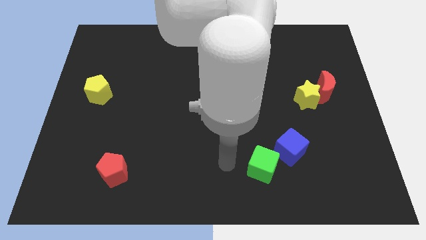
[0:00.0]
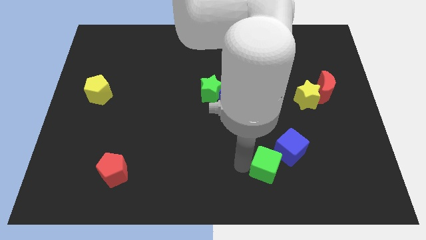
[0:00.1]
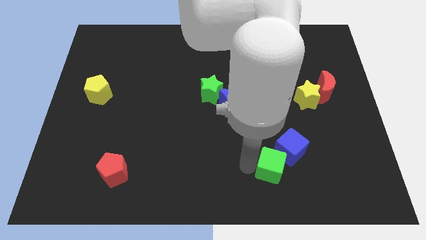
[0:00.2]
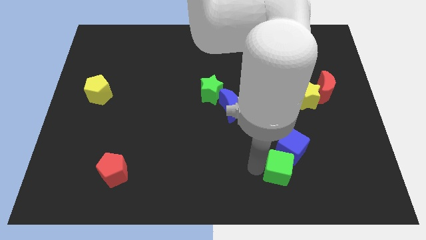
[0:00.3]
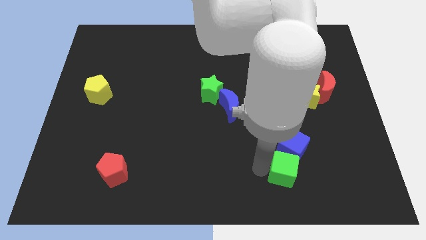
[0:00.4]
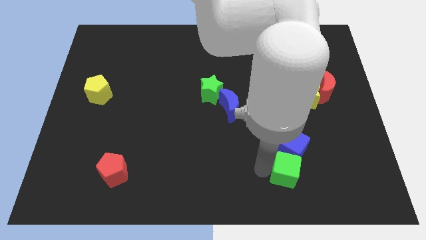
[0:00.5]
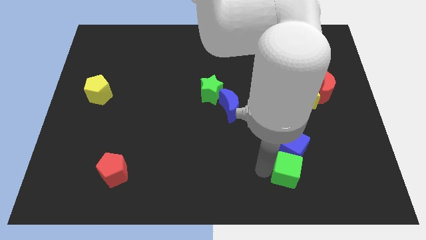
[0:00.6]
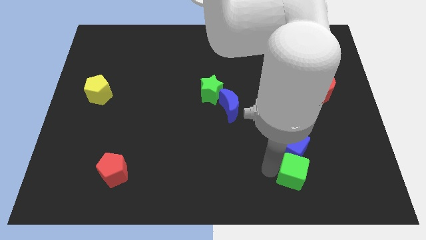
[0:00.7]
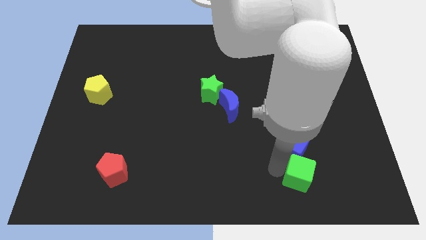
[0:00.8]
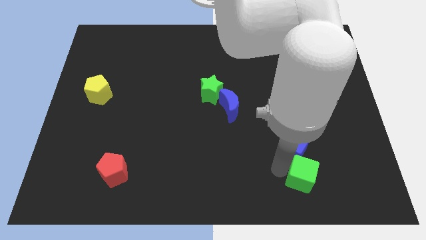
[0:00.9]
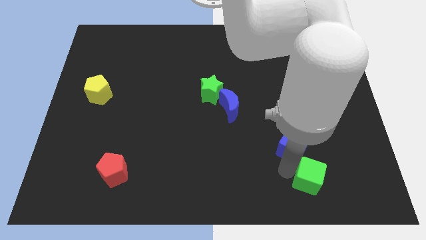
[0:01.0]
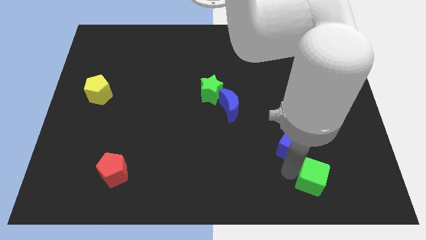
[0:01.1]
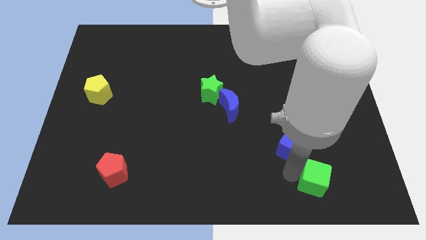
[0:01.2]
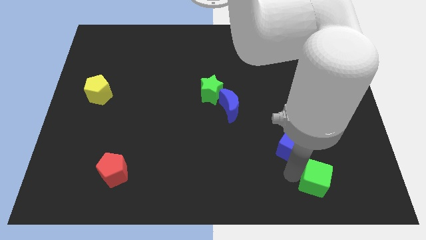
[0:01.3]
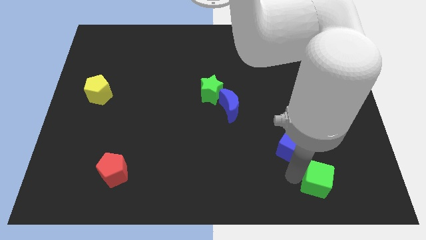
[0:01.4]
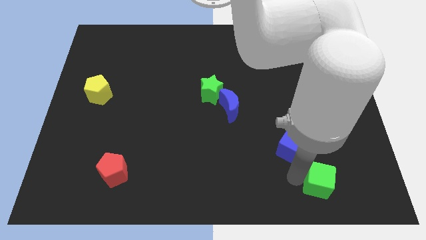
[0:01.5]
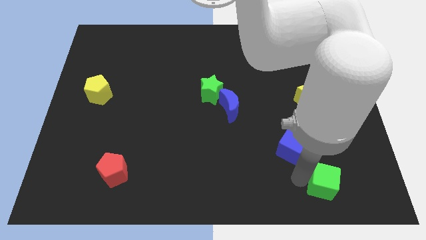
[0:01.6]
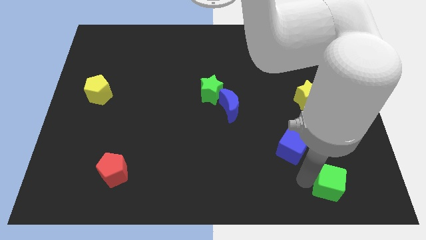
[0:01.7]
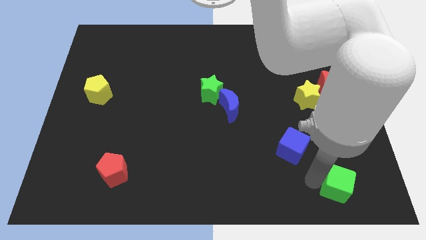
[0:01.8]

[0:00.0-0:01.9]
separate the green cube from the blue cube

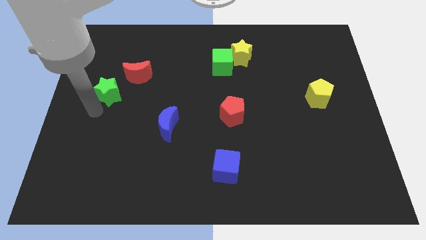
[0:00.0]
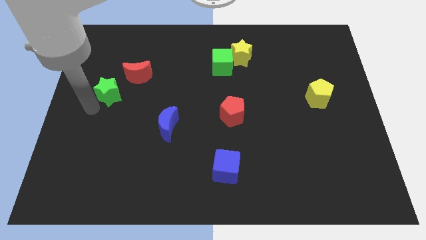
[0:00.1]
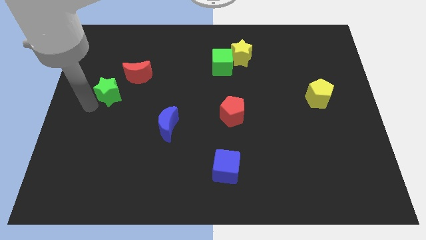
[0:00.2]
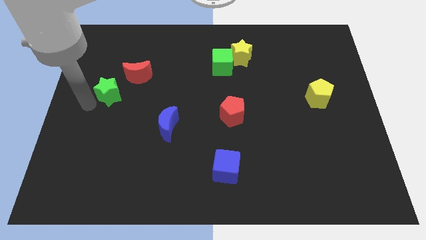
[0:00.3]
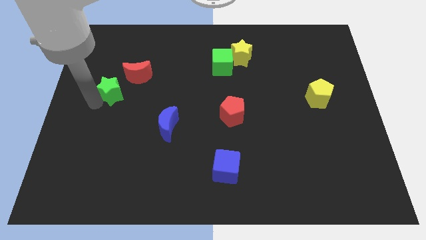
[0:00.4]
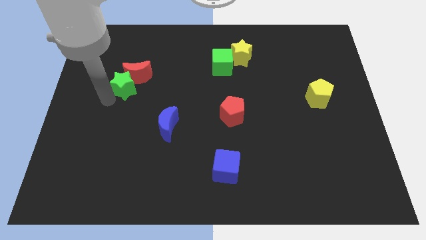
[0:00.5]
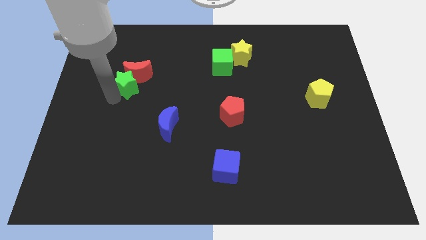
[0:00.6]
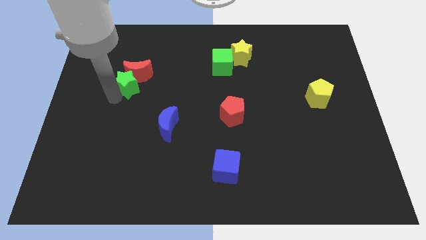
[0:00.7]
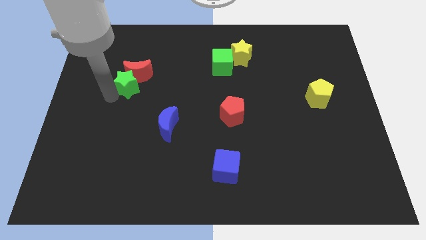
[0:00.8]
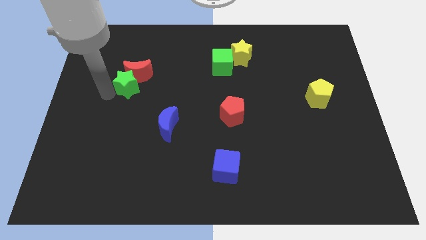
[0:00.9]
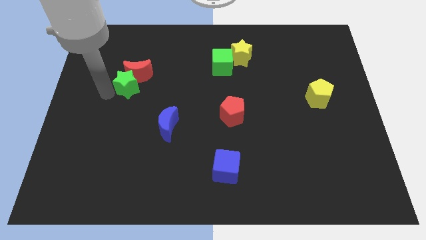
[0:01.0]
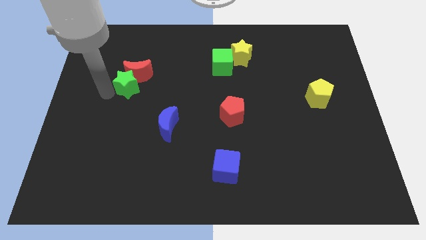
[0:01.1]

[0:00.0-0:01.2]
push the green star into the red crescent

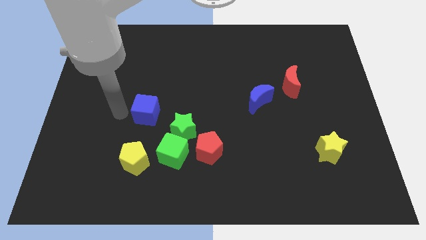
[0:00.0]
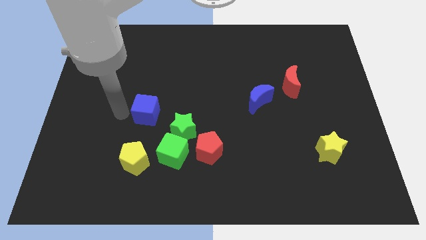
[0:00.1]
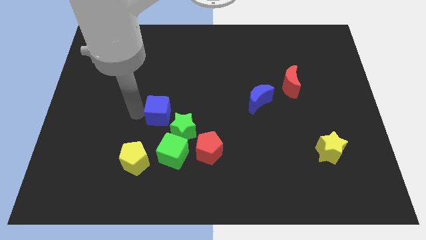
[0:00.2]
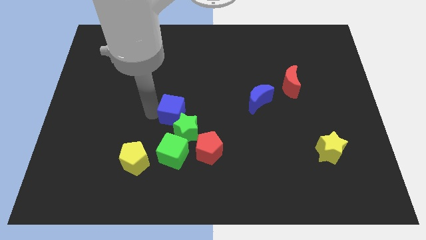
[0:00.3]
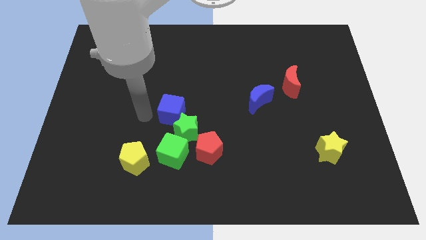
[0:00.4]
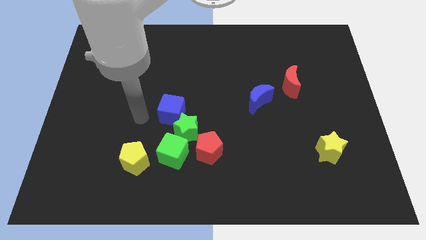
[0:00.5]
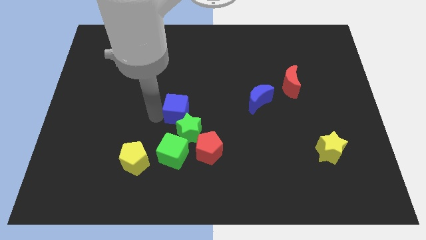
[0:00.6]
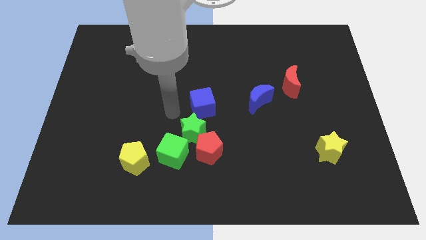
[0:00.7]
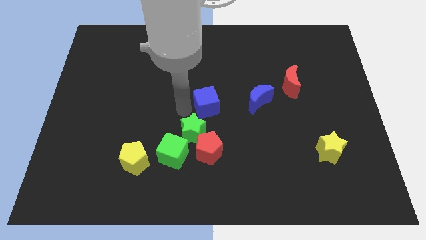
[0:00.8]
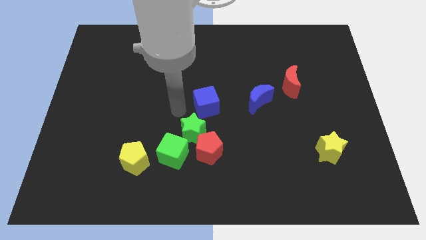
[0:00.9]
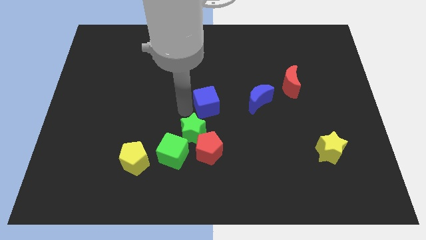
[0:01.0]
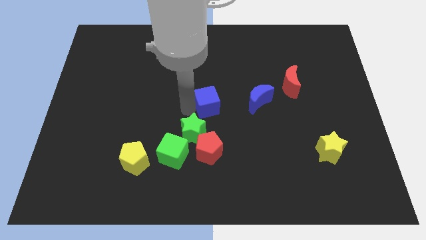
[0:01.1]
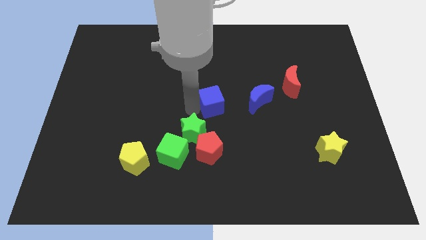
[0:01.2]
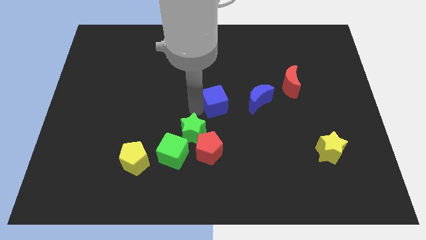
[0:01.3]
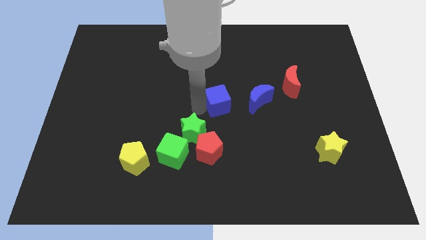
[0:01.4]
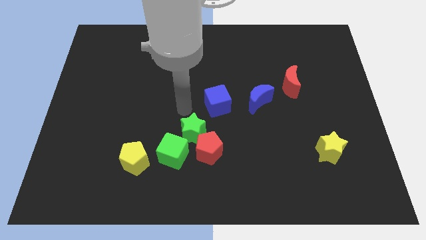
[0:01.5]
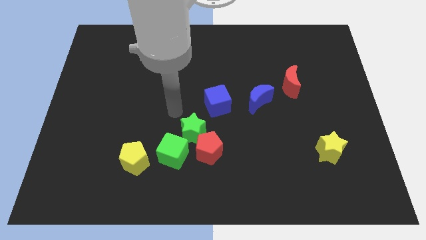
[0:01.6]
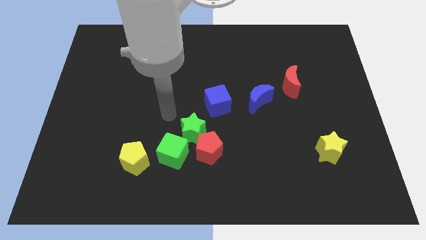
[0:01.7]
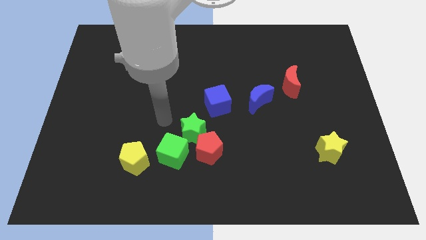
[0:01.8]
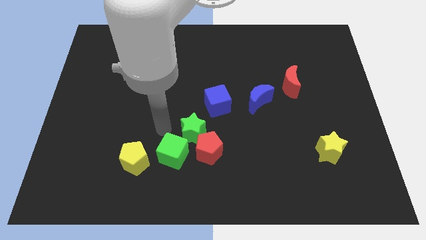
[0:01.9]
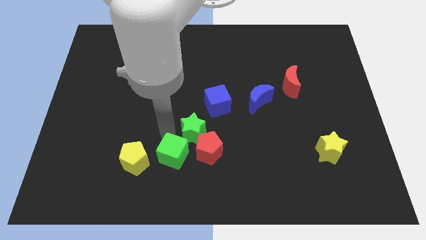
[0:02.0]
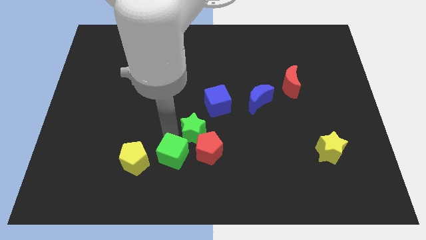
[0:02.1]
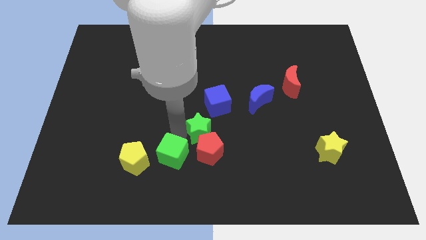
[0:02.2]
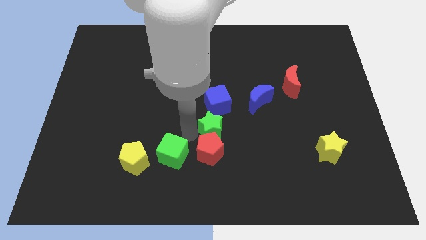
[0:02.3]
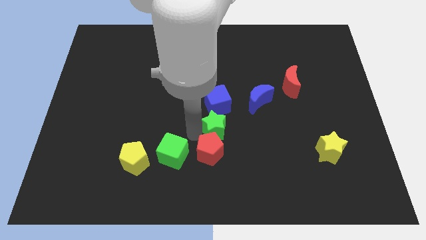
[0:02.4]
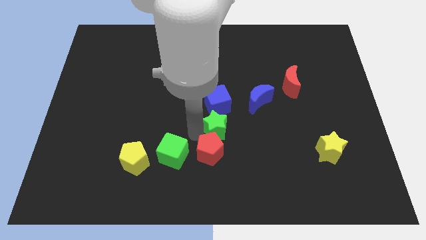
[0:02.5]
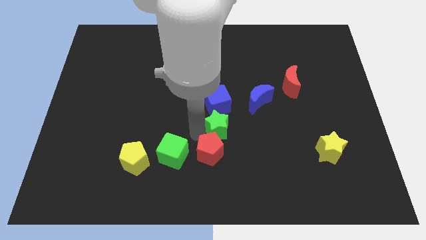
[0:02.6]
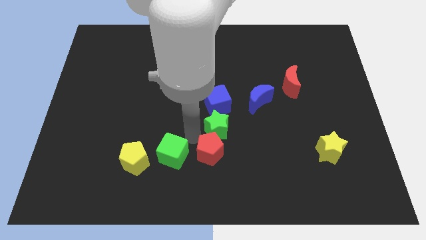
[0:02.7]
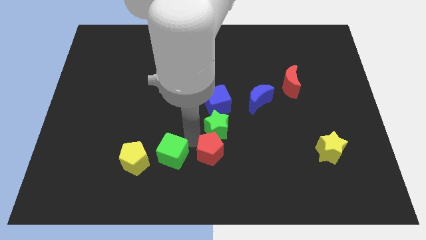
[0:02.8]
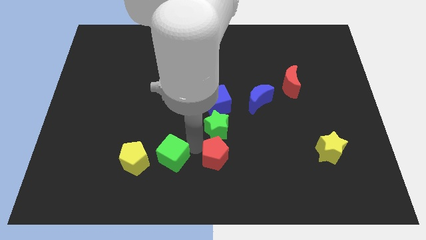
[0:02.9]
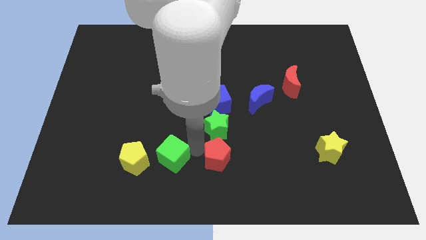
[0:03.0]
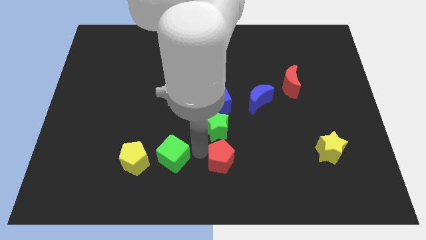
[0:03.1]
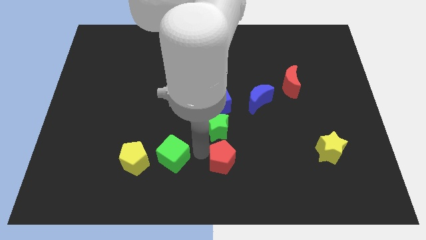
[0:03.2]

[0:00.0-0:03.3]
push blue cube green star red pentagon to the center of the board

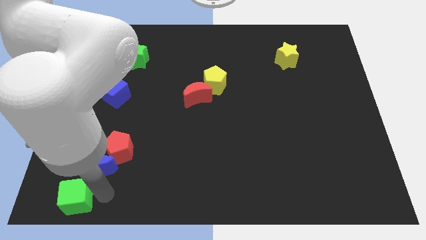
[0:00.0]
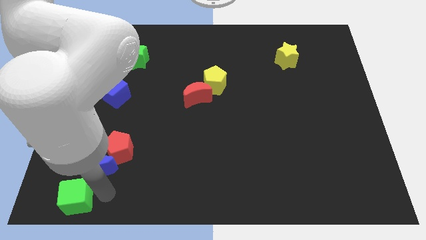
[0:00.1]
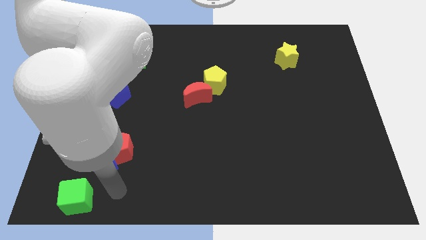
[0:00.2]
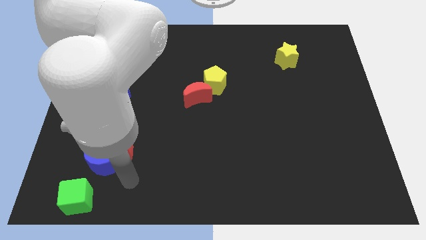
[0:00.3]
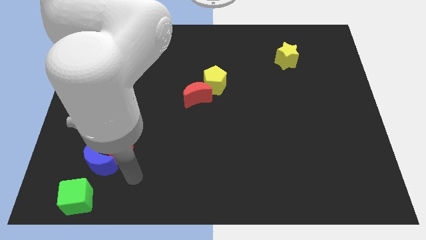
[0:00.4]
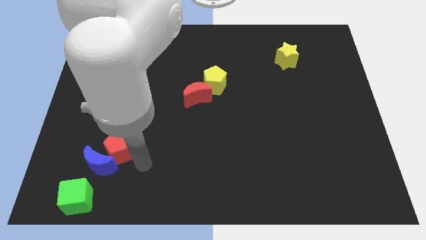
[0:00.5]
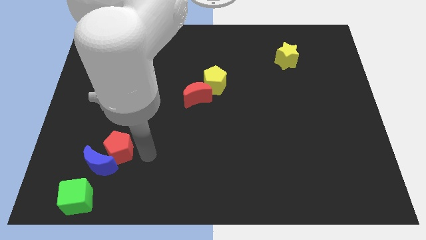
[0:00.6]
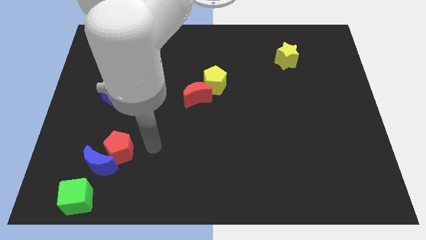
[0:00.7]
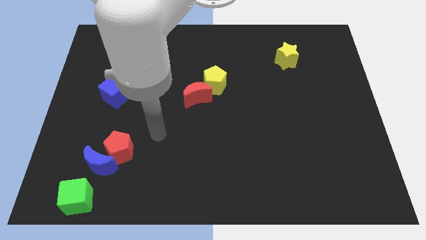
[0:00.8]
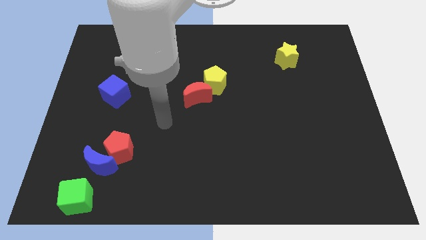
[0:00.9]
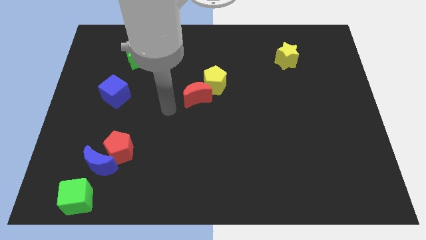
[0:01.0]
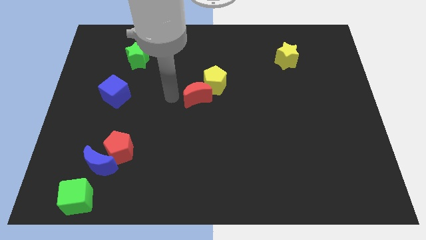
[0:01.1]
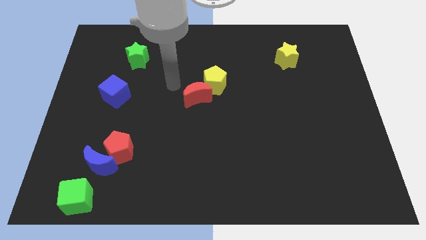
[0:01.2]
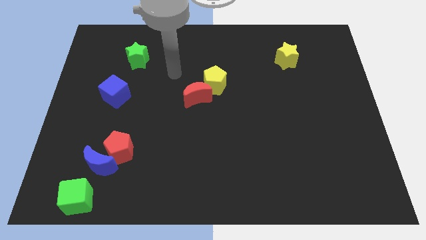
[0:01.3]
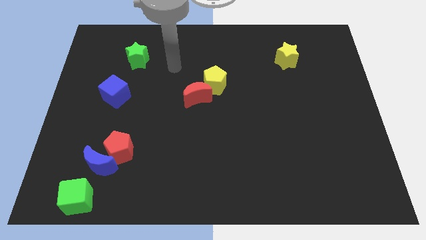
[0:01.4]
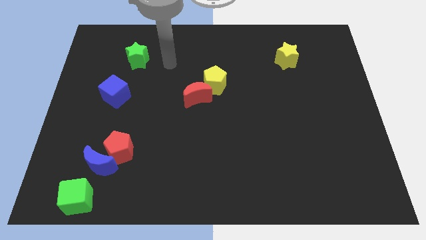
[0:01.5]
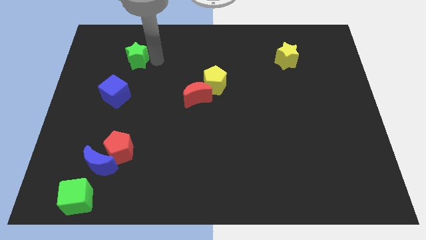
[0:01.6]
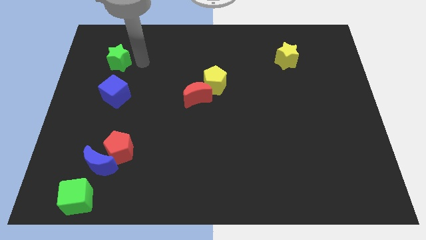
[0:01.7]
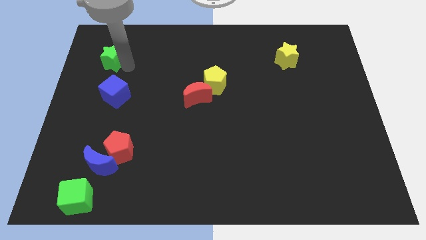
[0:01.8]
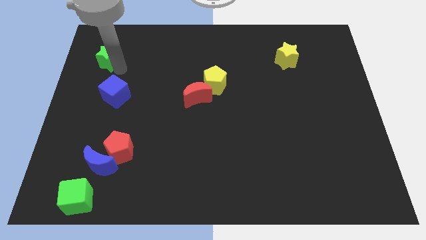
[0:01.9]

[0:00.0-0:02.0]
place your arm near to the green star

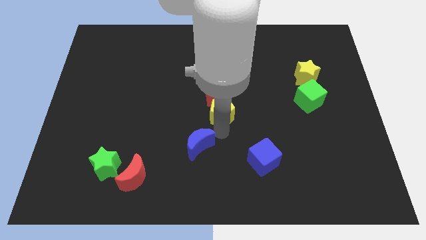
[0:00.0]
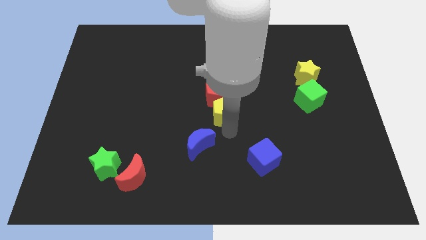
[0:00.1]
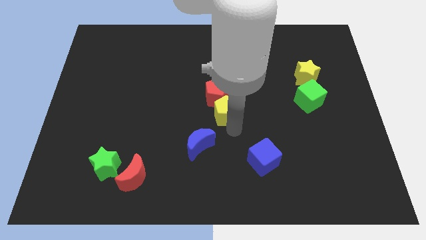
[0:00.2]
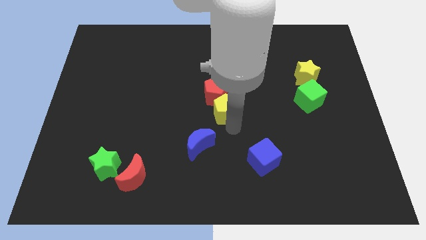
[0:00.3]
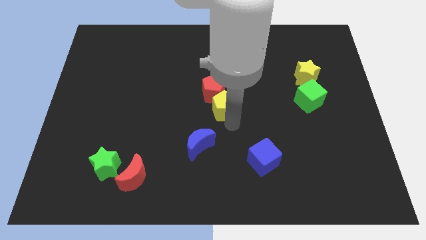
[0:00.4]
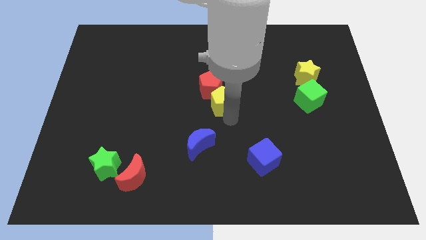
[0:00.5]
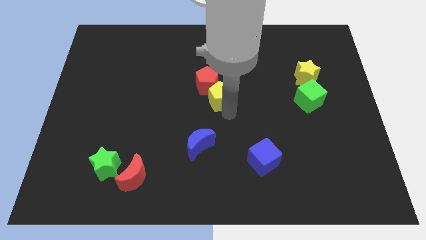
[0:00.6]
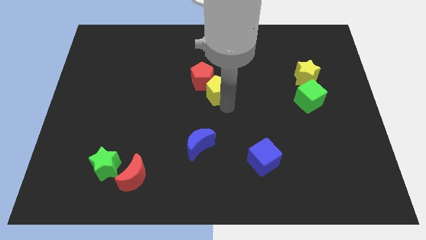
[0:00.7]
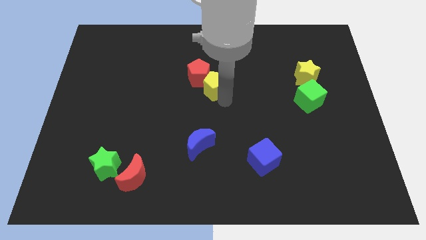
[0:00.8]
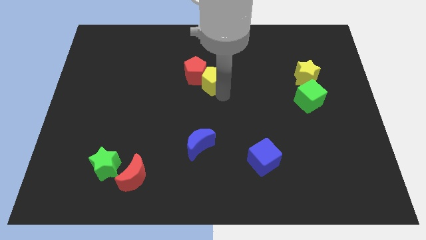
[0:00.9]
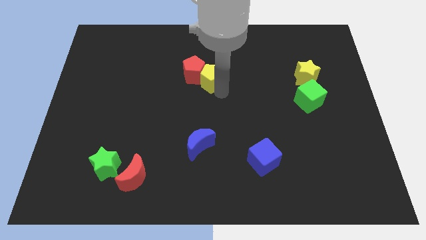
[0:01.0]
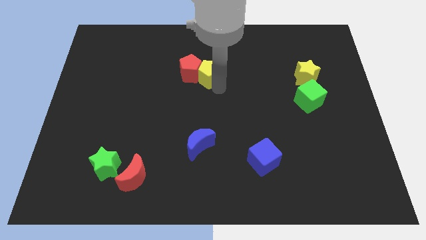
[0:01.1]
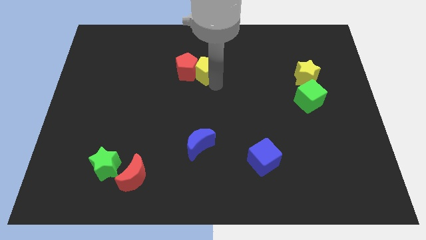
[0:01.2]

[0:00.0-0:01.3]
push the yellow pentagon along with the red pentagon towards the top
